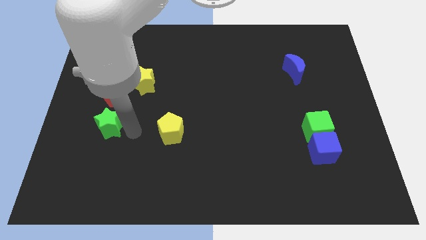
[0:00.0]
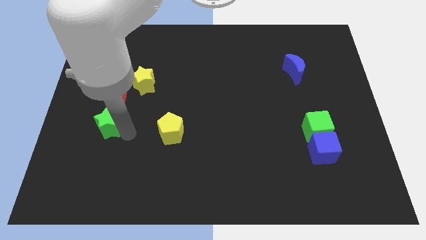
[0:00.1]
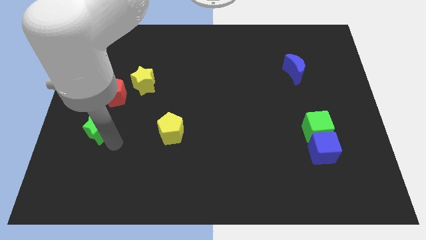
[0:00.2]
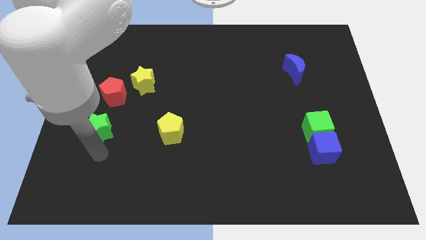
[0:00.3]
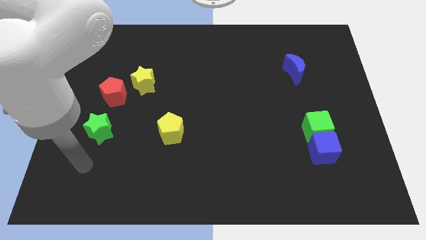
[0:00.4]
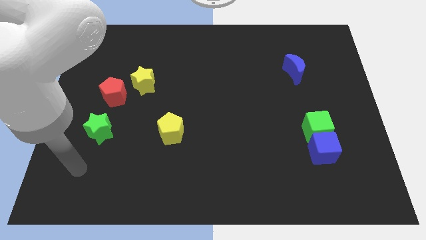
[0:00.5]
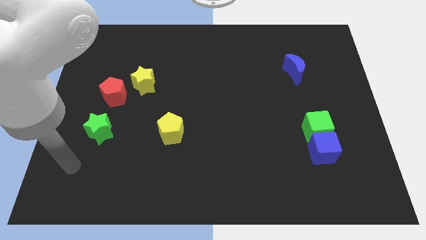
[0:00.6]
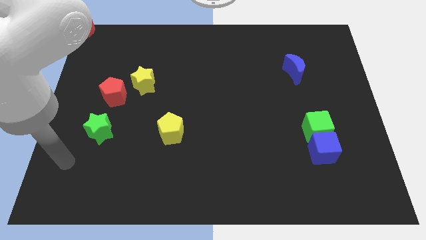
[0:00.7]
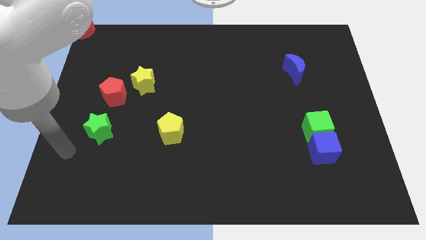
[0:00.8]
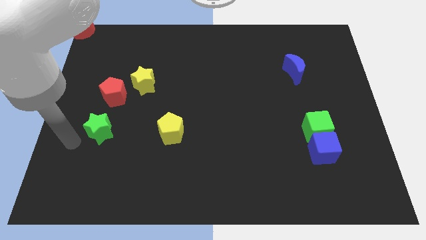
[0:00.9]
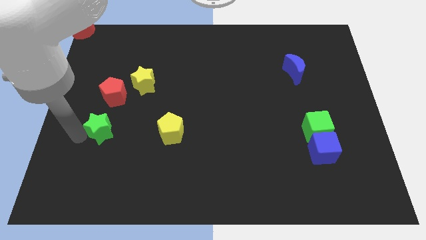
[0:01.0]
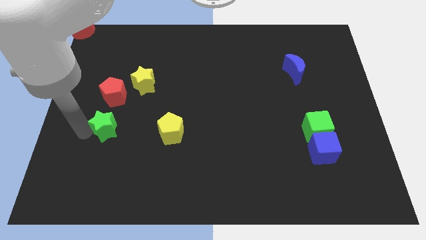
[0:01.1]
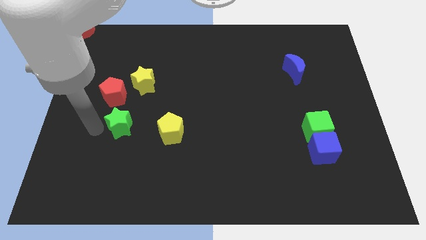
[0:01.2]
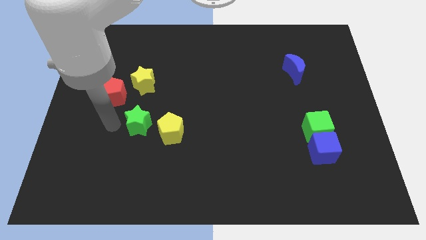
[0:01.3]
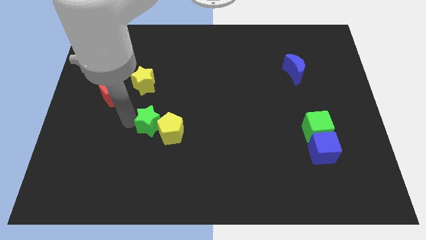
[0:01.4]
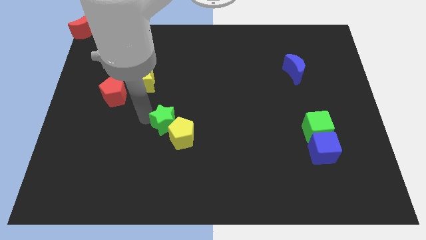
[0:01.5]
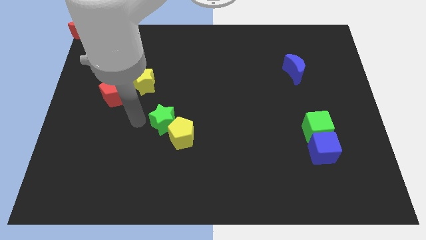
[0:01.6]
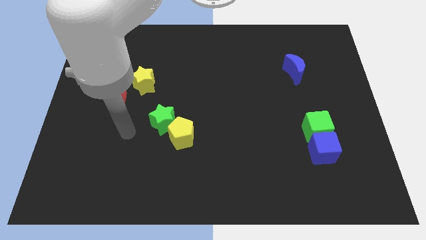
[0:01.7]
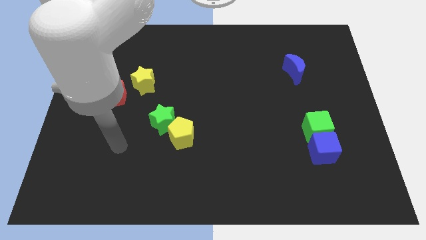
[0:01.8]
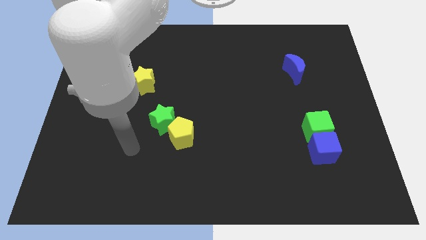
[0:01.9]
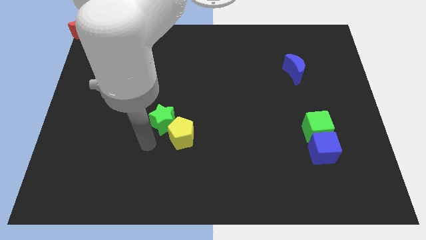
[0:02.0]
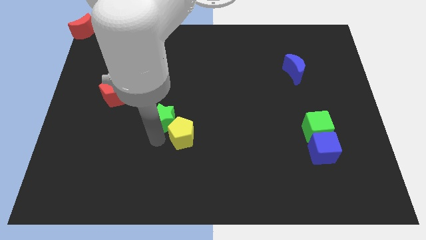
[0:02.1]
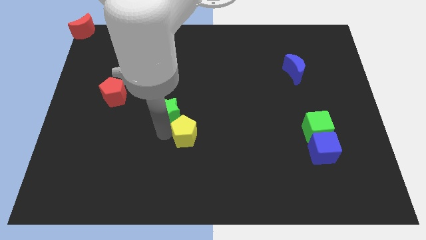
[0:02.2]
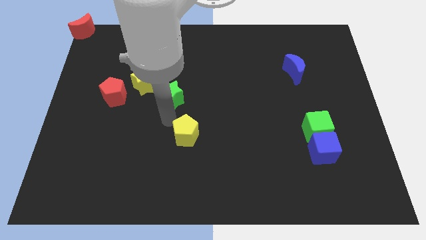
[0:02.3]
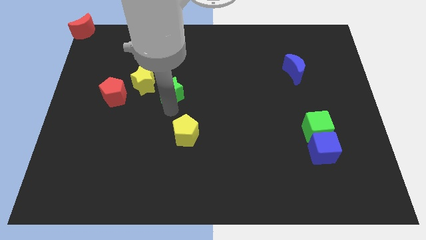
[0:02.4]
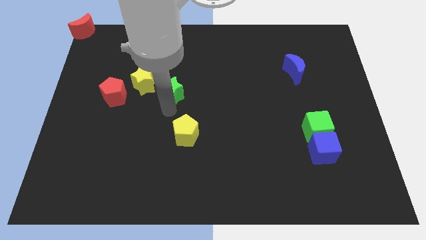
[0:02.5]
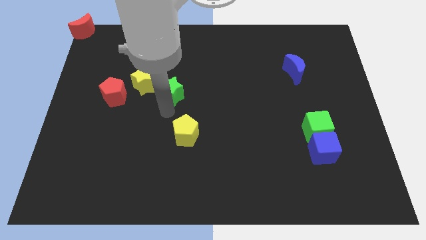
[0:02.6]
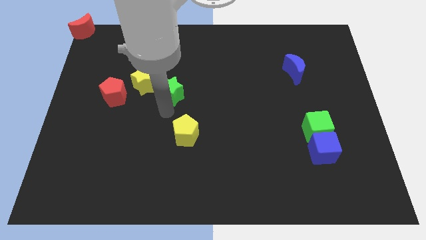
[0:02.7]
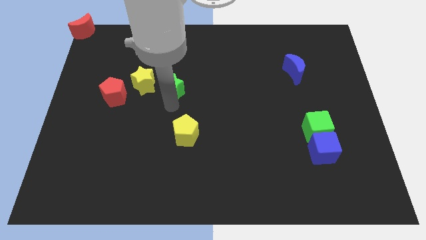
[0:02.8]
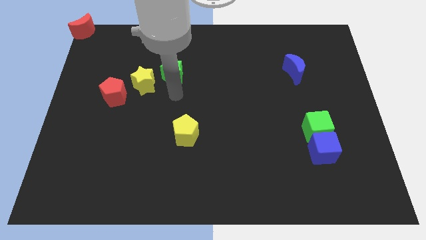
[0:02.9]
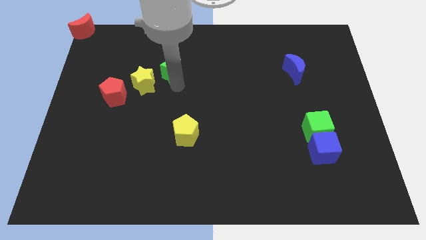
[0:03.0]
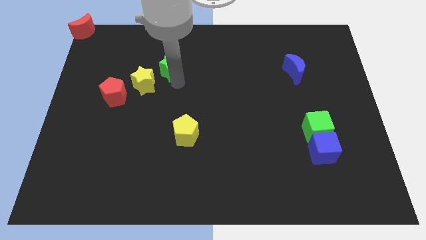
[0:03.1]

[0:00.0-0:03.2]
move the green star to the right side of the yellow pentagon

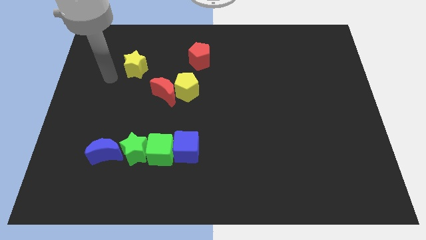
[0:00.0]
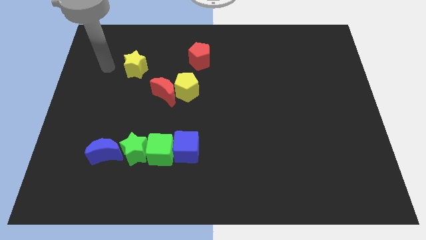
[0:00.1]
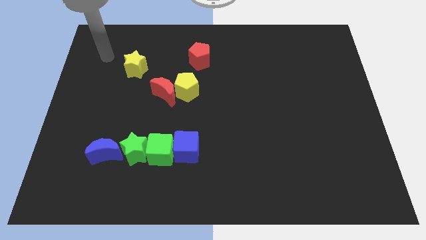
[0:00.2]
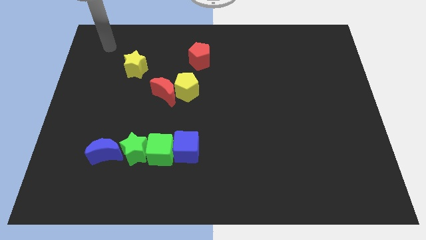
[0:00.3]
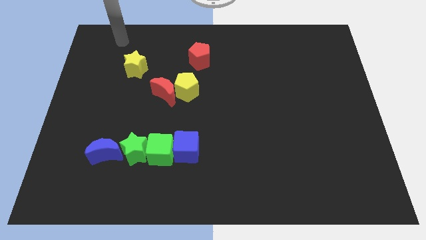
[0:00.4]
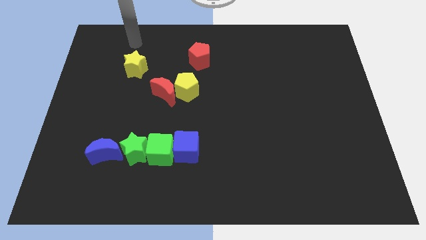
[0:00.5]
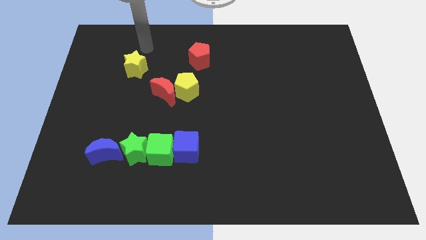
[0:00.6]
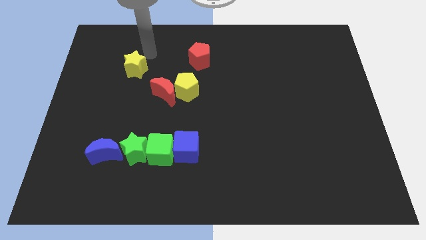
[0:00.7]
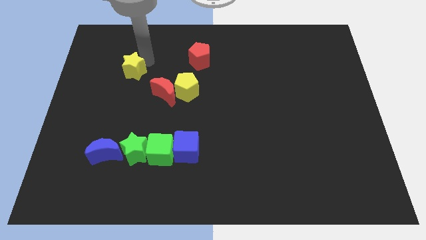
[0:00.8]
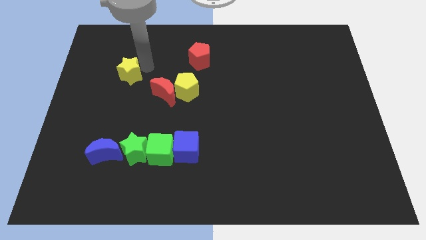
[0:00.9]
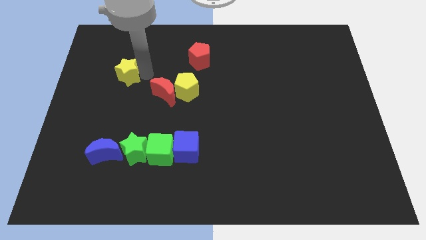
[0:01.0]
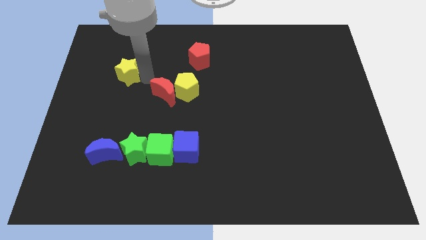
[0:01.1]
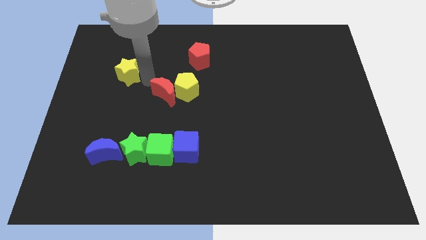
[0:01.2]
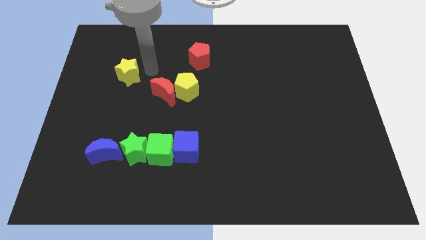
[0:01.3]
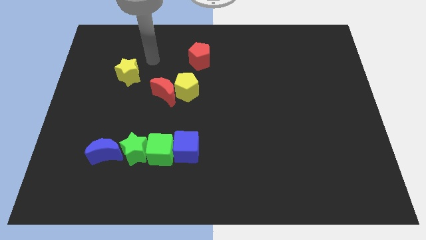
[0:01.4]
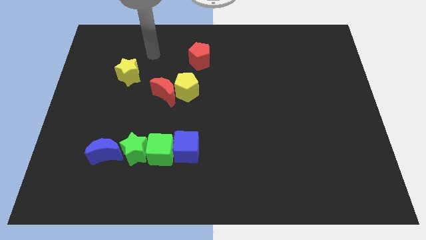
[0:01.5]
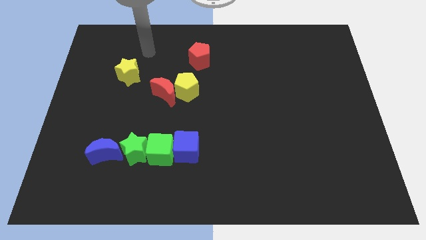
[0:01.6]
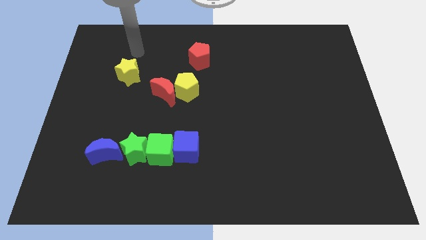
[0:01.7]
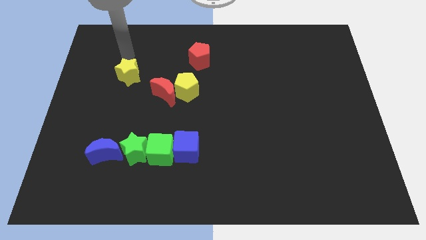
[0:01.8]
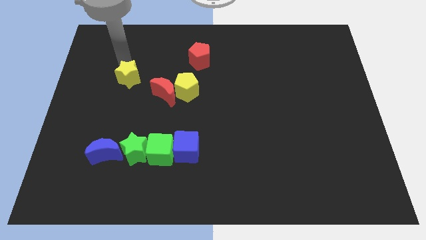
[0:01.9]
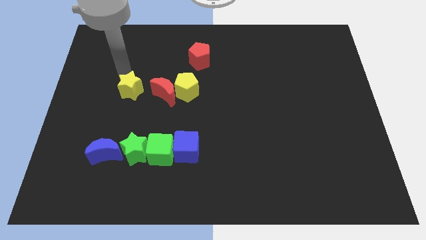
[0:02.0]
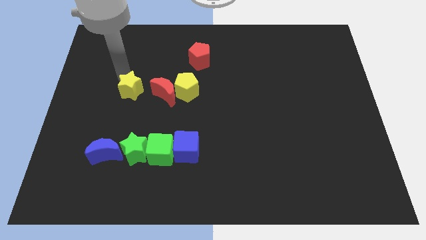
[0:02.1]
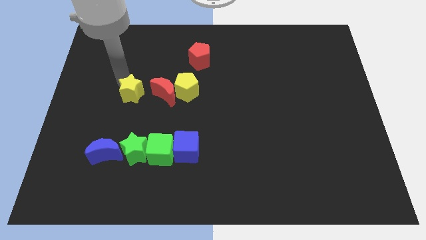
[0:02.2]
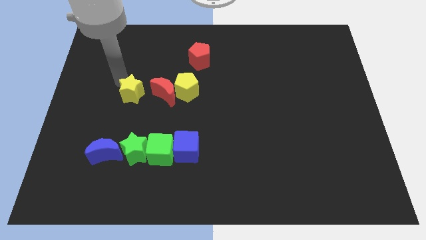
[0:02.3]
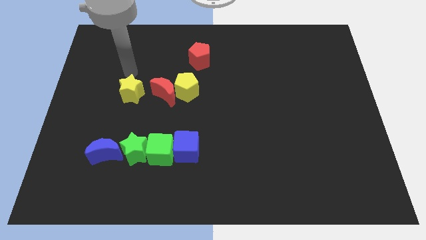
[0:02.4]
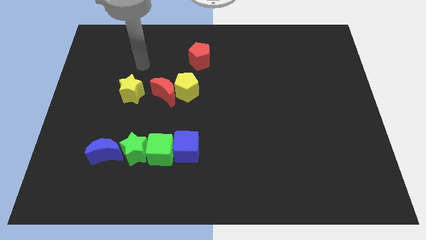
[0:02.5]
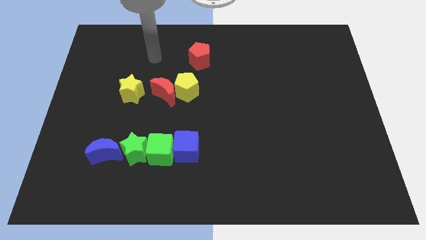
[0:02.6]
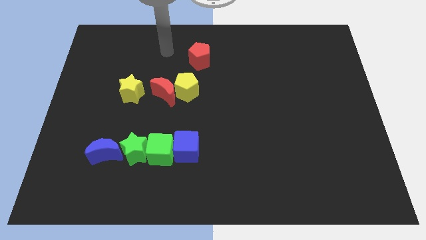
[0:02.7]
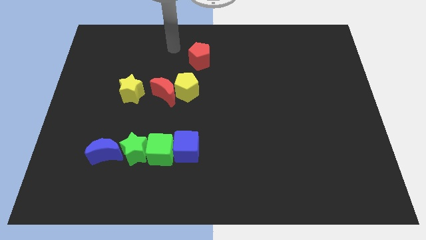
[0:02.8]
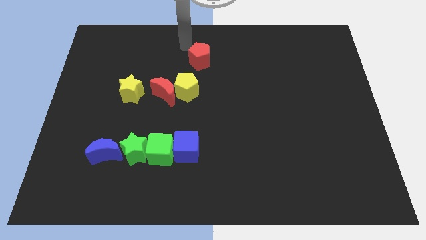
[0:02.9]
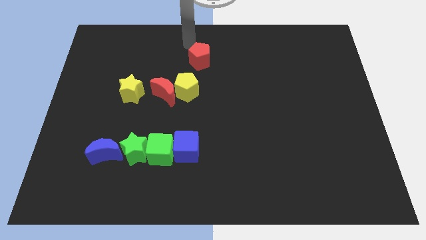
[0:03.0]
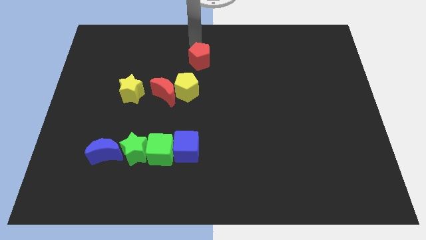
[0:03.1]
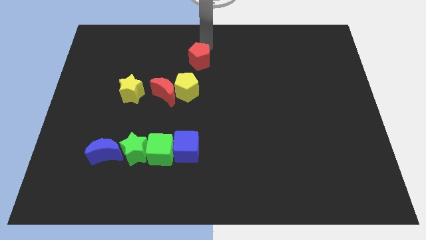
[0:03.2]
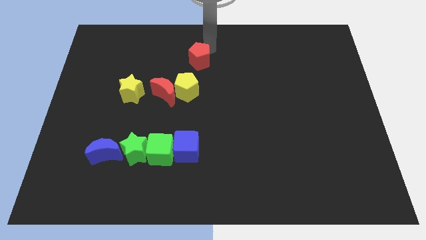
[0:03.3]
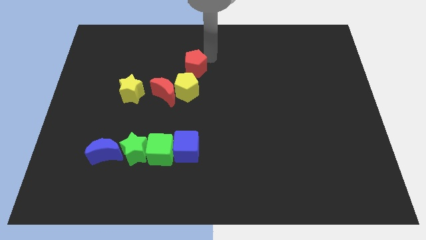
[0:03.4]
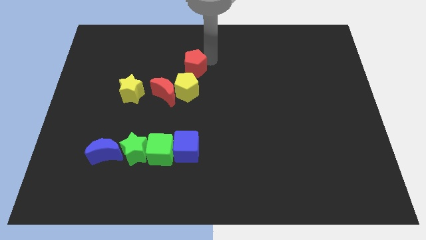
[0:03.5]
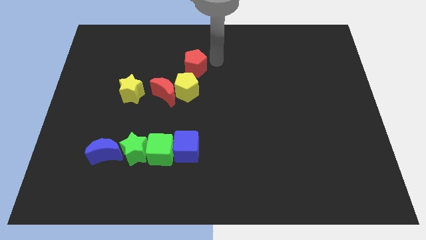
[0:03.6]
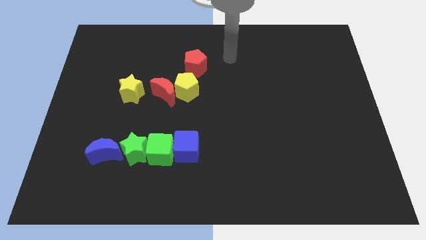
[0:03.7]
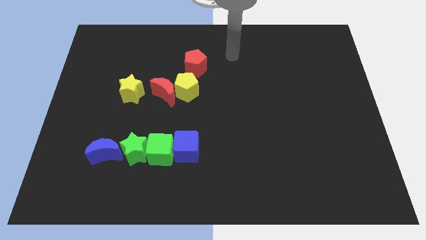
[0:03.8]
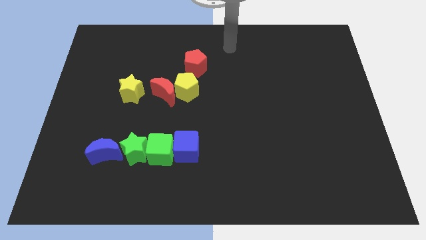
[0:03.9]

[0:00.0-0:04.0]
move the yellow star slightly towards the red crescent on the left center of the board

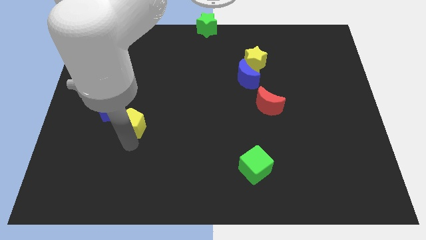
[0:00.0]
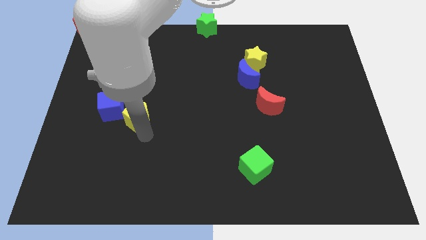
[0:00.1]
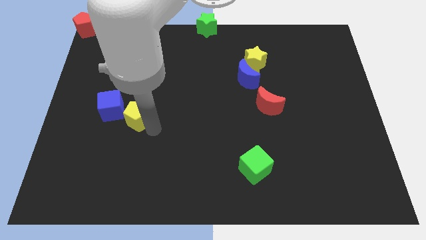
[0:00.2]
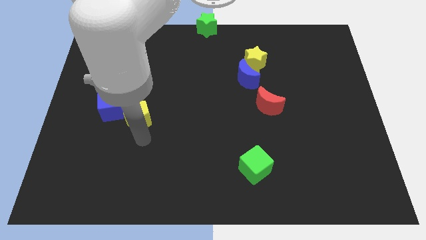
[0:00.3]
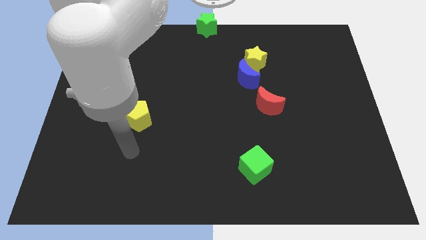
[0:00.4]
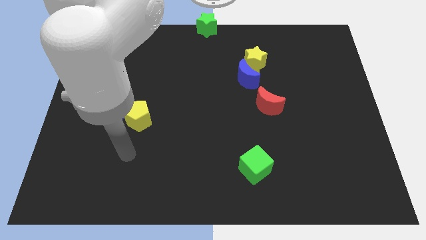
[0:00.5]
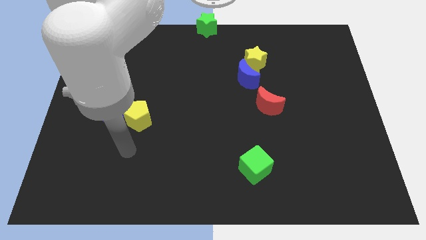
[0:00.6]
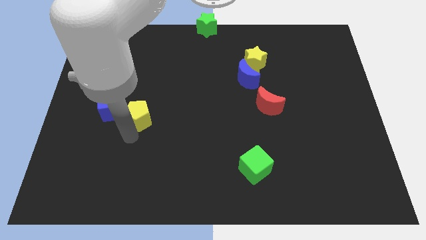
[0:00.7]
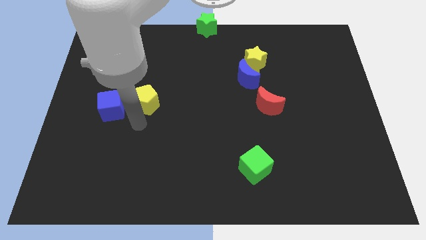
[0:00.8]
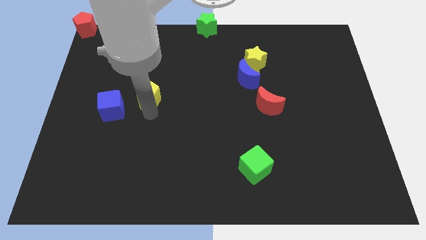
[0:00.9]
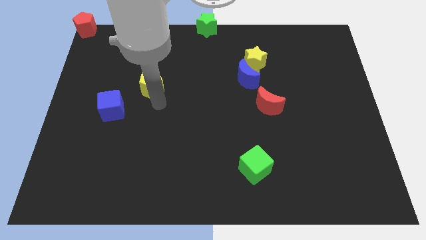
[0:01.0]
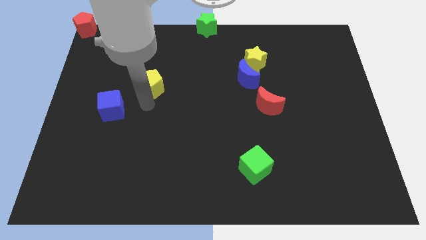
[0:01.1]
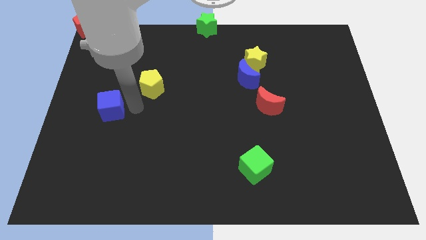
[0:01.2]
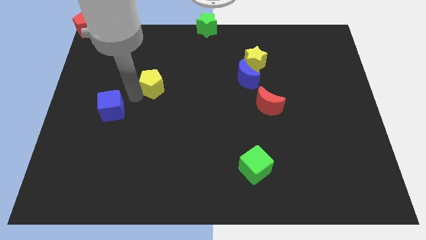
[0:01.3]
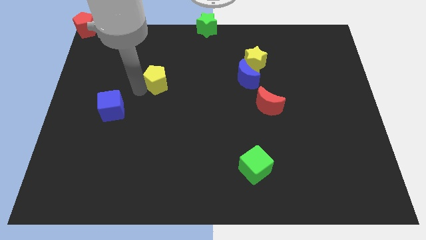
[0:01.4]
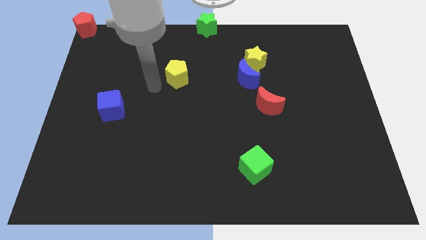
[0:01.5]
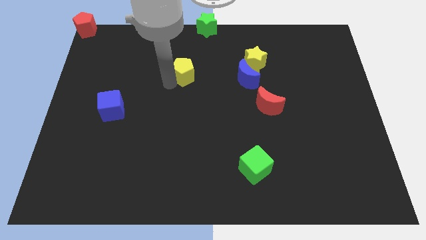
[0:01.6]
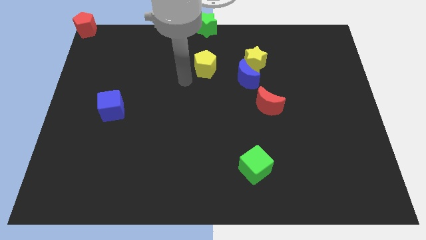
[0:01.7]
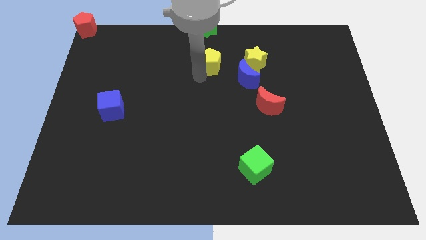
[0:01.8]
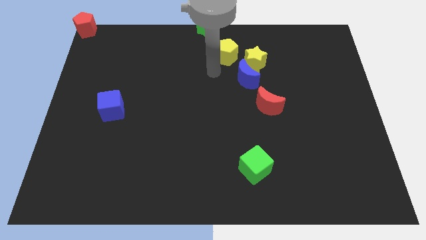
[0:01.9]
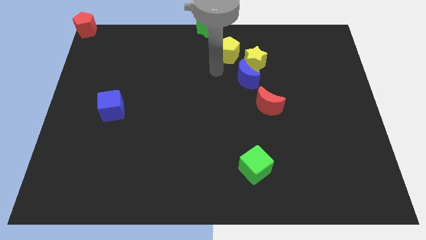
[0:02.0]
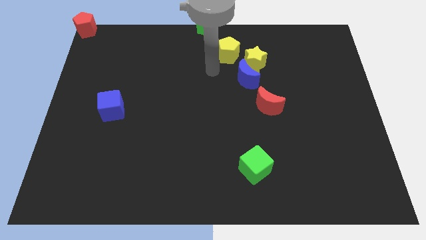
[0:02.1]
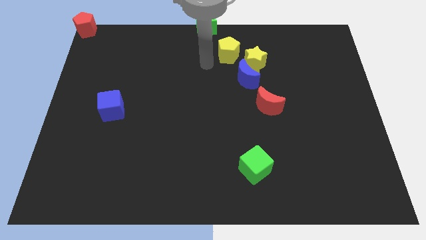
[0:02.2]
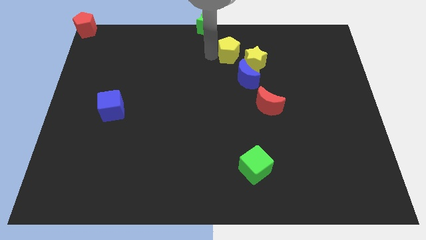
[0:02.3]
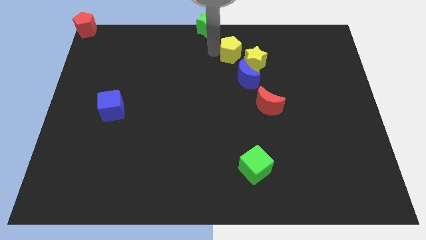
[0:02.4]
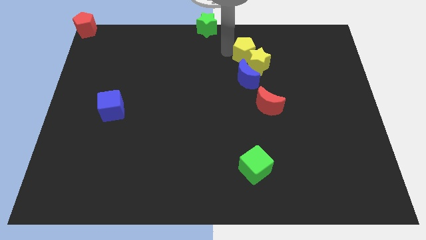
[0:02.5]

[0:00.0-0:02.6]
place the yellow pentagon in between the stars
